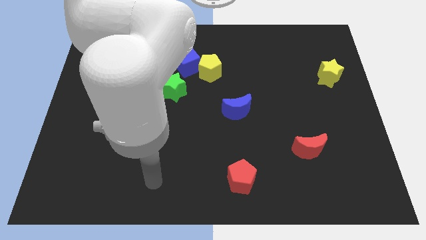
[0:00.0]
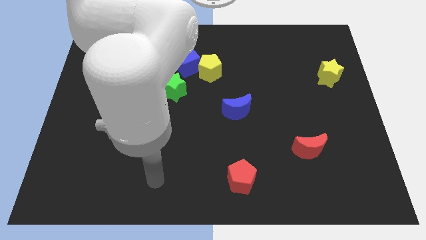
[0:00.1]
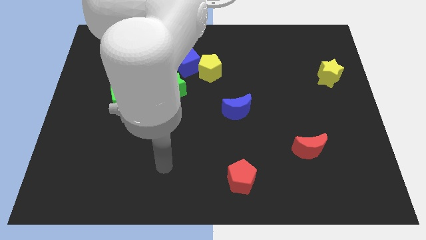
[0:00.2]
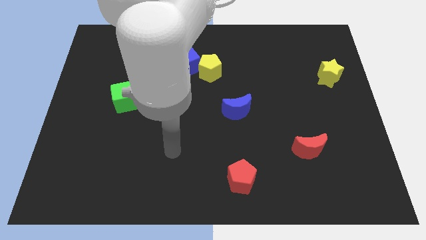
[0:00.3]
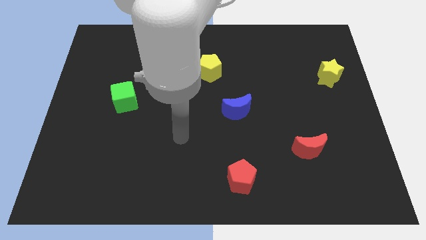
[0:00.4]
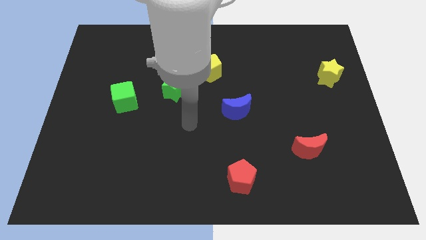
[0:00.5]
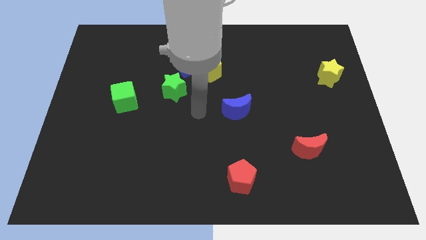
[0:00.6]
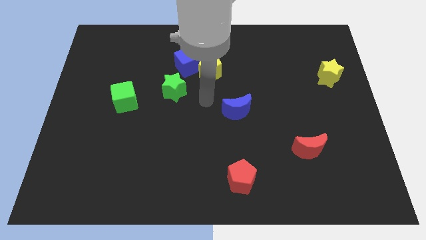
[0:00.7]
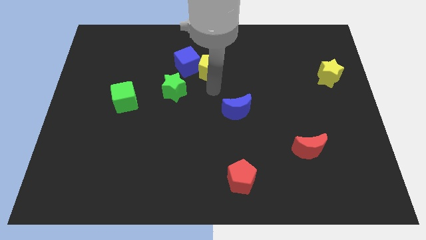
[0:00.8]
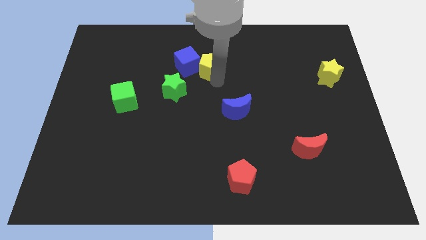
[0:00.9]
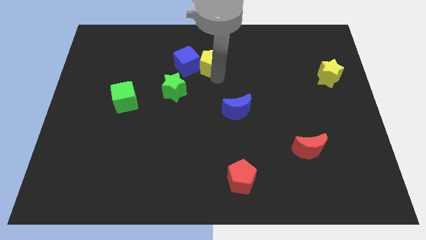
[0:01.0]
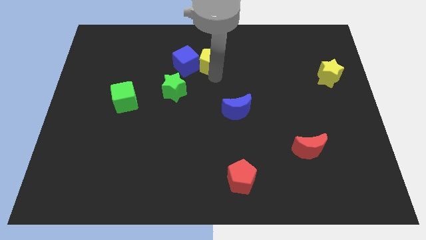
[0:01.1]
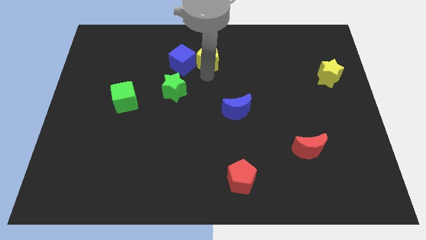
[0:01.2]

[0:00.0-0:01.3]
move the yellow pentagon to the right side of the blue cube

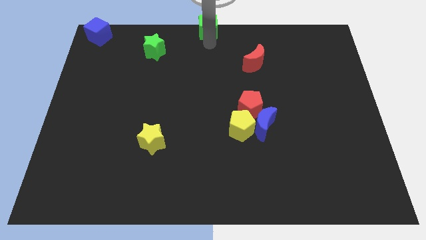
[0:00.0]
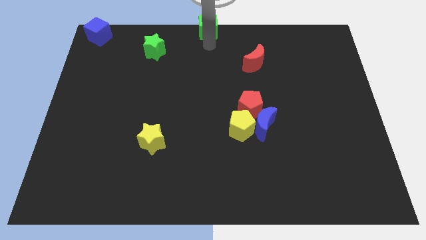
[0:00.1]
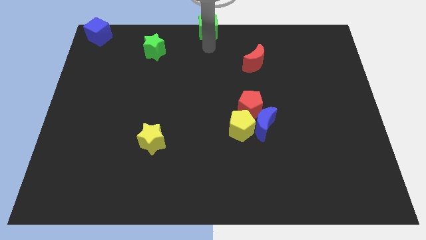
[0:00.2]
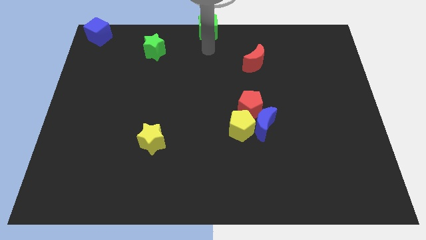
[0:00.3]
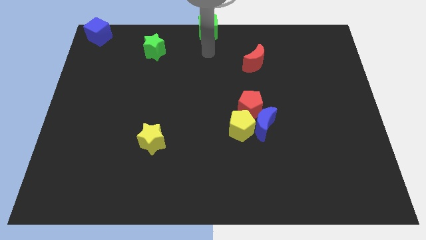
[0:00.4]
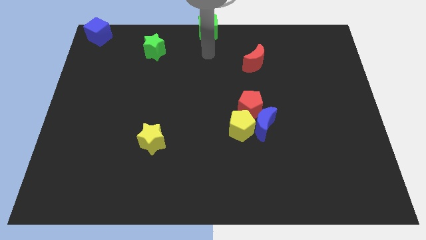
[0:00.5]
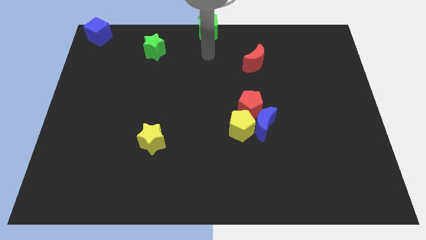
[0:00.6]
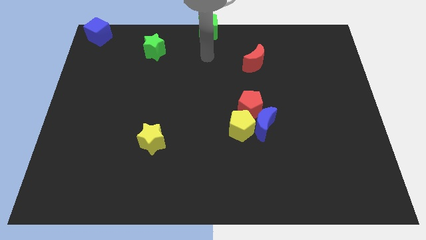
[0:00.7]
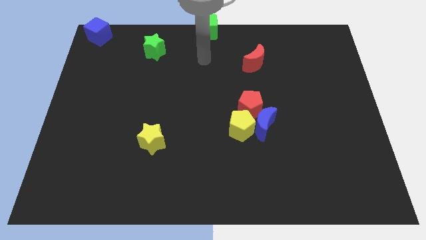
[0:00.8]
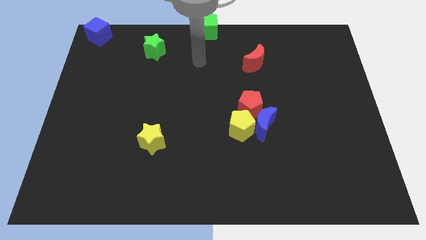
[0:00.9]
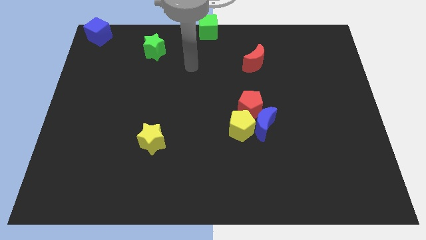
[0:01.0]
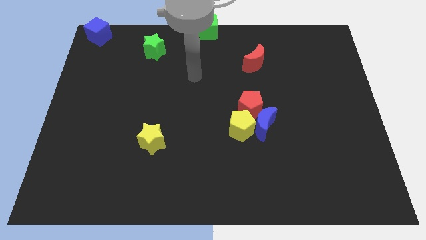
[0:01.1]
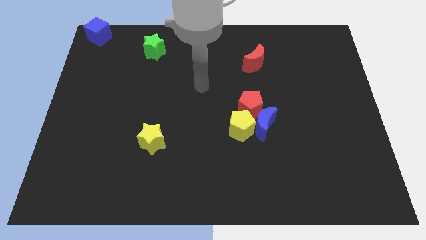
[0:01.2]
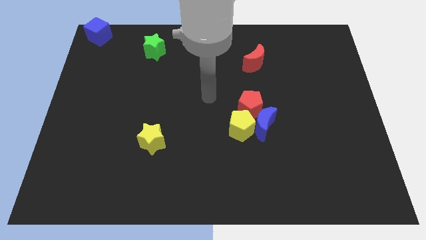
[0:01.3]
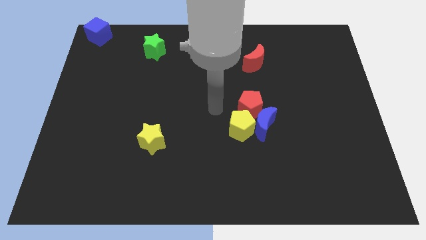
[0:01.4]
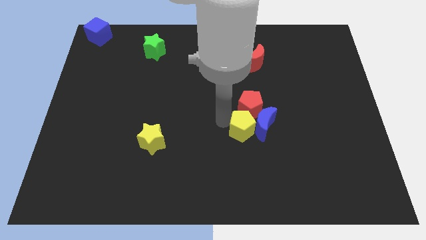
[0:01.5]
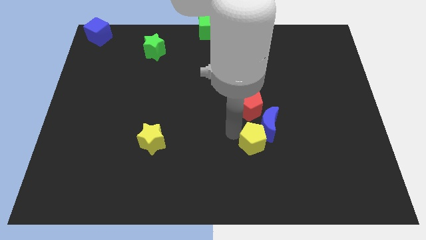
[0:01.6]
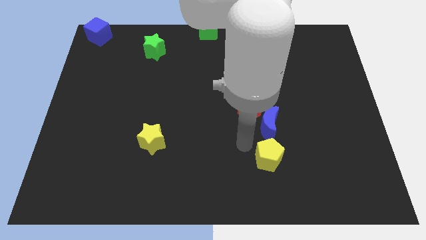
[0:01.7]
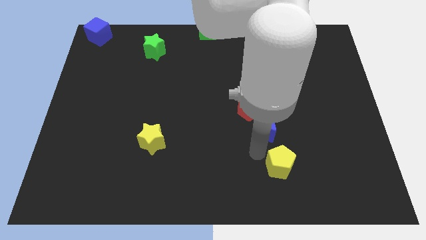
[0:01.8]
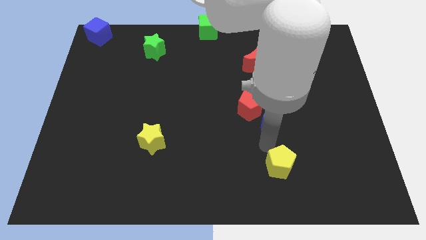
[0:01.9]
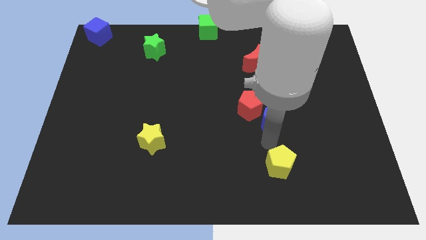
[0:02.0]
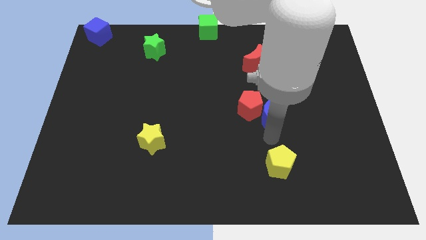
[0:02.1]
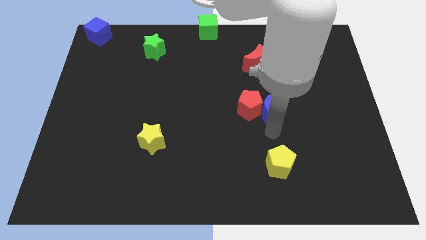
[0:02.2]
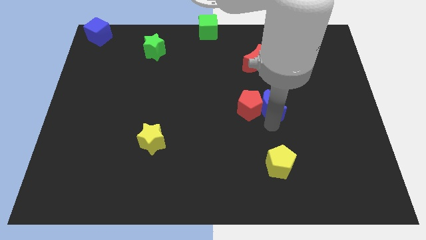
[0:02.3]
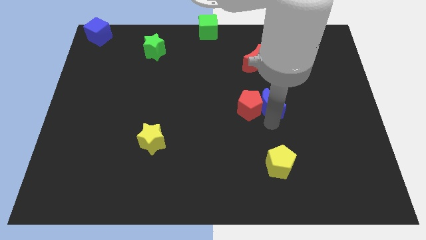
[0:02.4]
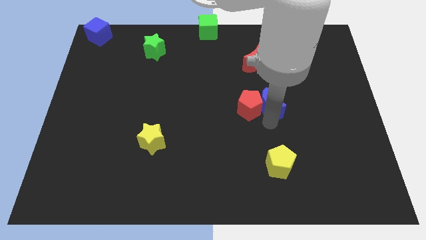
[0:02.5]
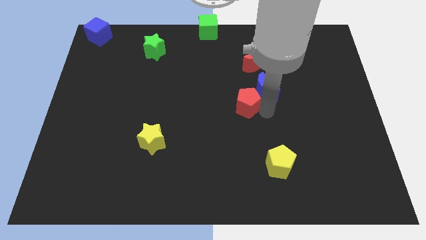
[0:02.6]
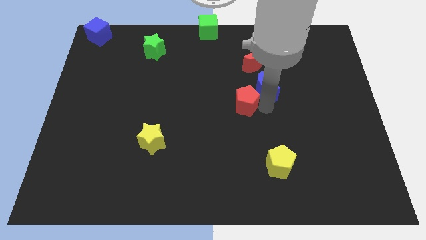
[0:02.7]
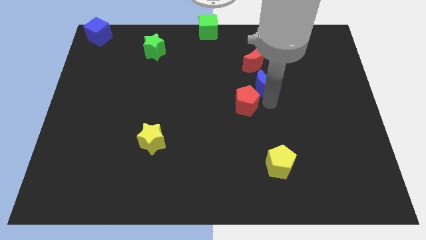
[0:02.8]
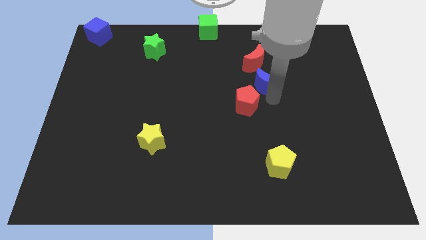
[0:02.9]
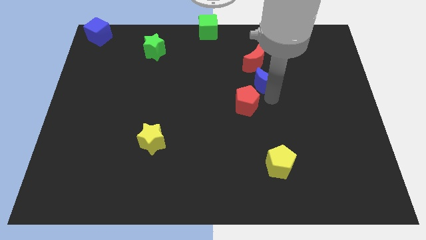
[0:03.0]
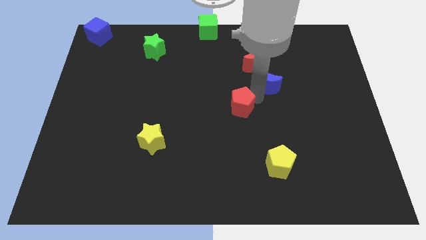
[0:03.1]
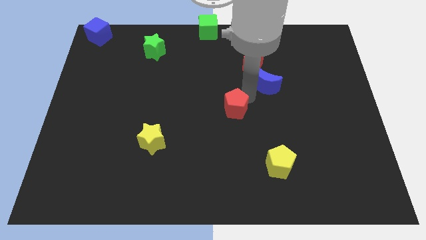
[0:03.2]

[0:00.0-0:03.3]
separate blue moon and red pentagon

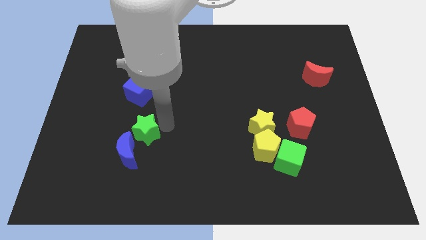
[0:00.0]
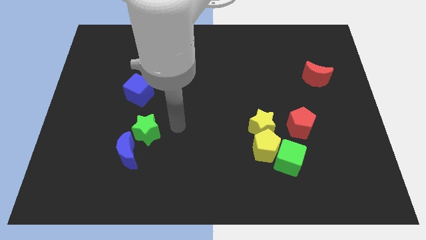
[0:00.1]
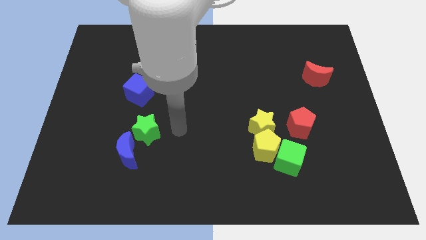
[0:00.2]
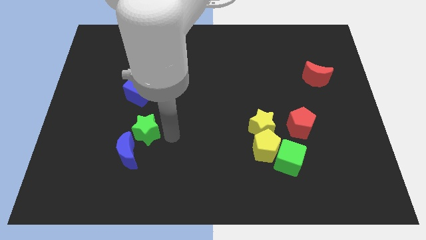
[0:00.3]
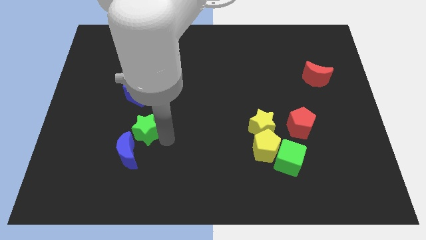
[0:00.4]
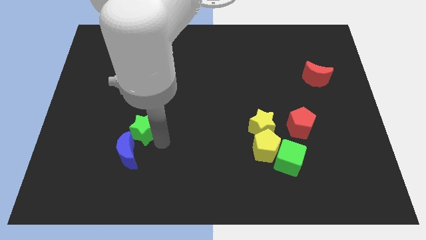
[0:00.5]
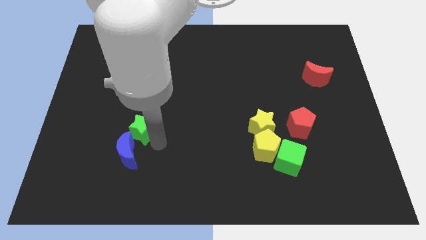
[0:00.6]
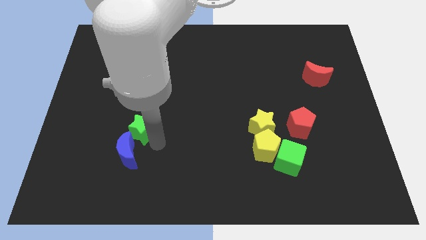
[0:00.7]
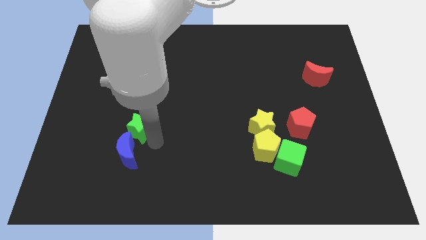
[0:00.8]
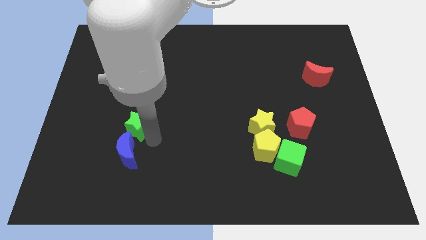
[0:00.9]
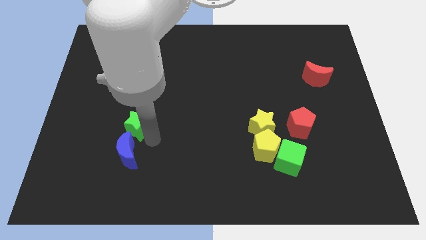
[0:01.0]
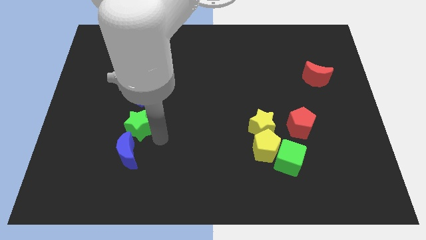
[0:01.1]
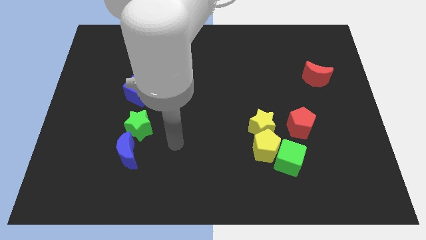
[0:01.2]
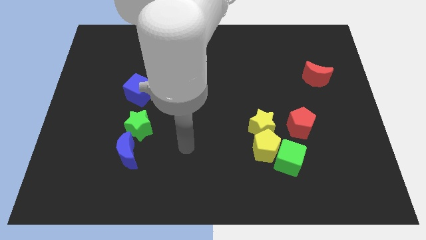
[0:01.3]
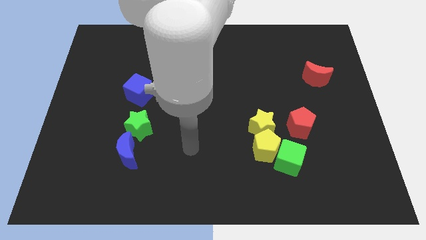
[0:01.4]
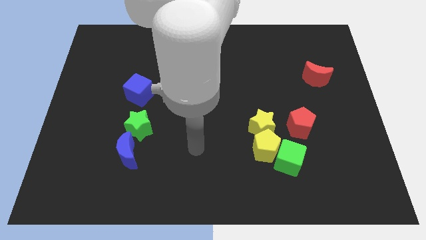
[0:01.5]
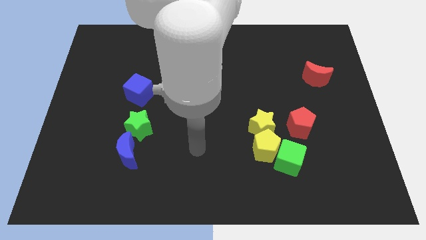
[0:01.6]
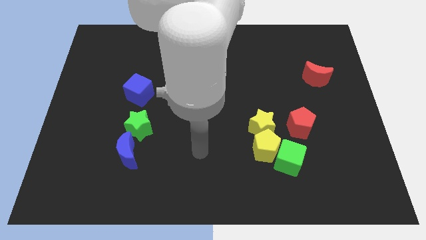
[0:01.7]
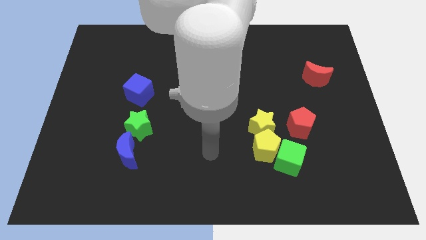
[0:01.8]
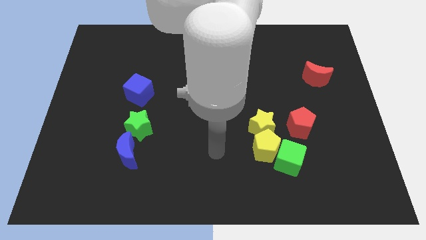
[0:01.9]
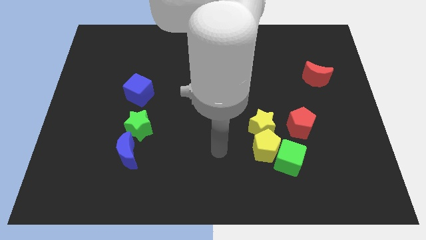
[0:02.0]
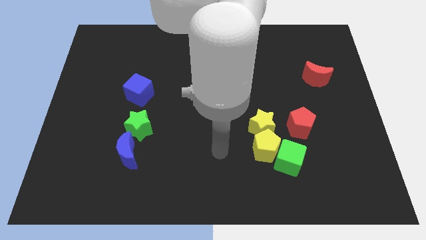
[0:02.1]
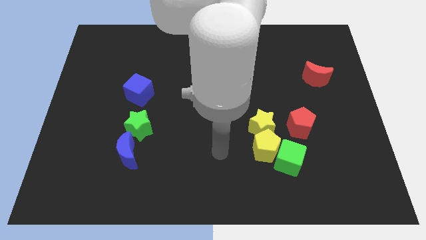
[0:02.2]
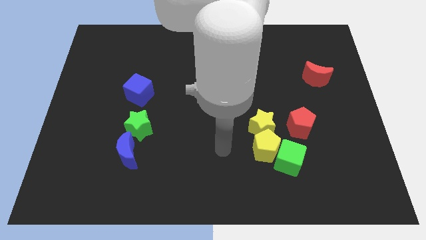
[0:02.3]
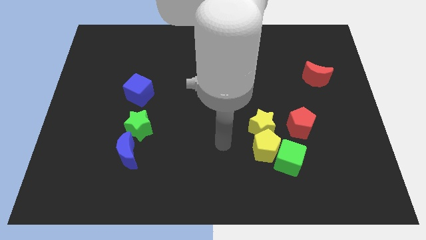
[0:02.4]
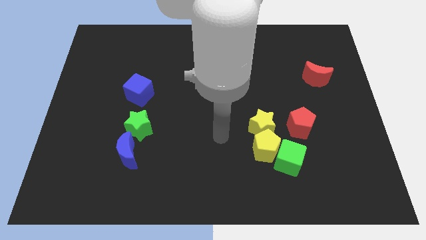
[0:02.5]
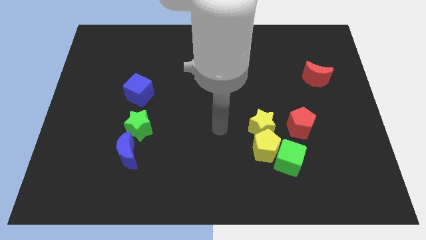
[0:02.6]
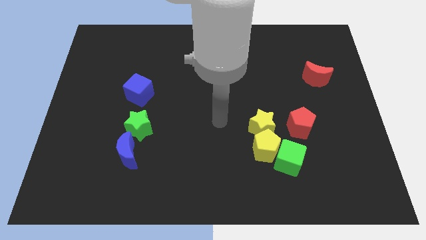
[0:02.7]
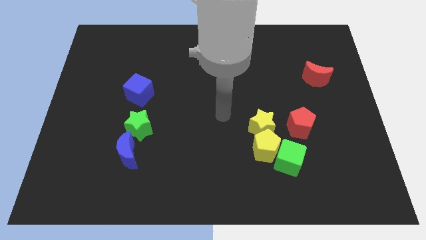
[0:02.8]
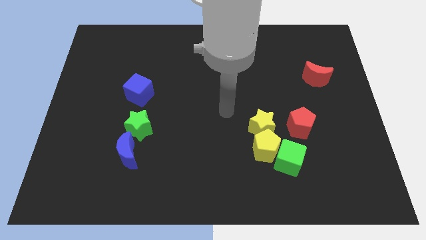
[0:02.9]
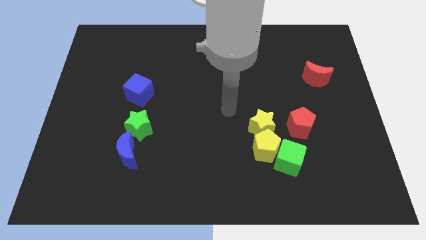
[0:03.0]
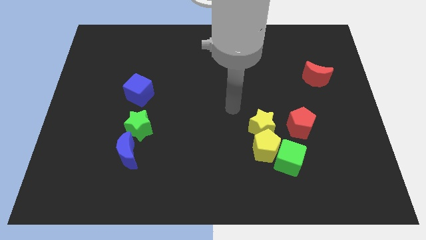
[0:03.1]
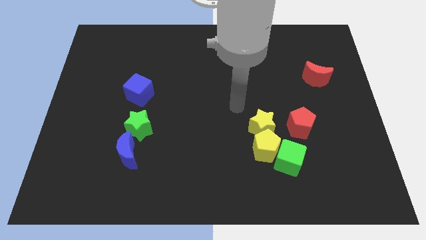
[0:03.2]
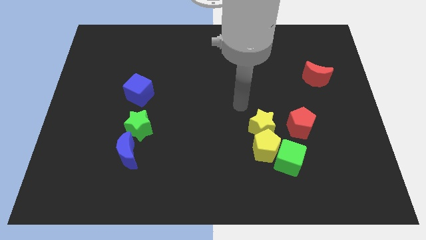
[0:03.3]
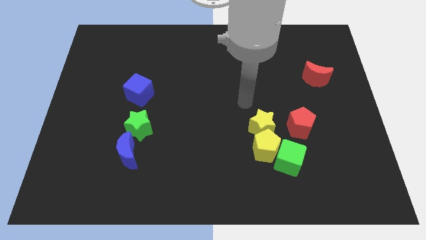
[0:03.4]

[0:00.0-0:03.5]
push the green star to the top of the blue moon

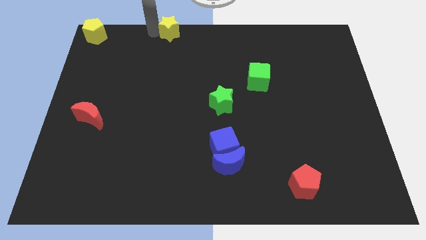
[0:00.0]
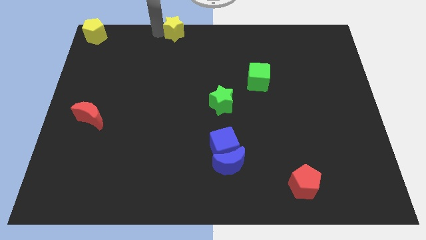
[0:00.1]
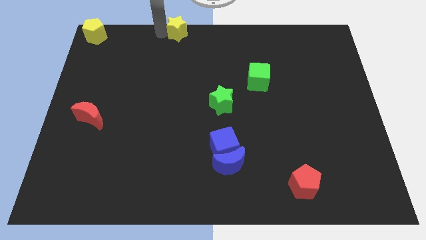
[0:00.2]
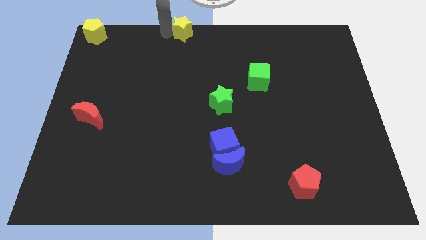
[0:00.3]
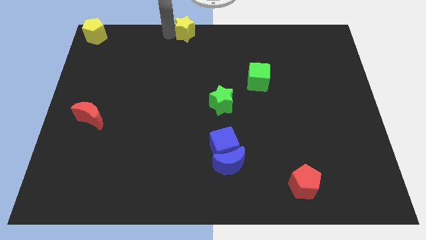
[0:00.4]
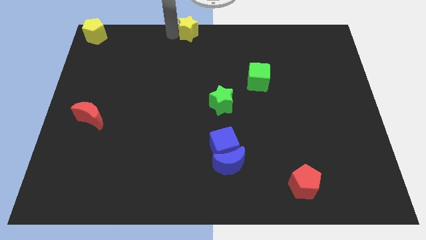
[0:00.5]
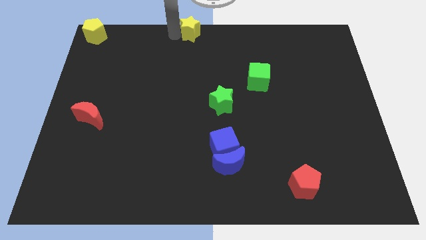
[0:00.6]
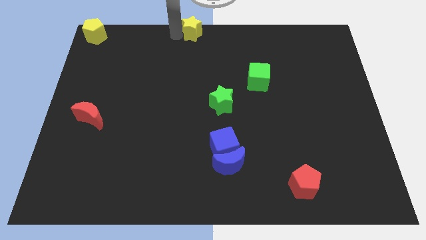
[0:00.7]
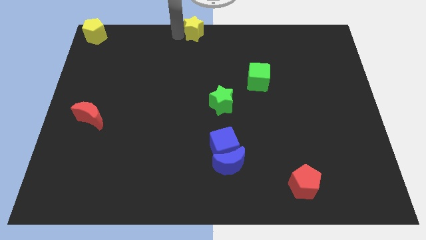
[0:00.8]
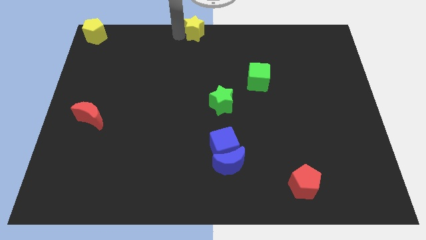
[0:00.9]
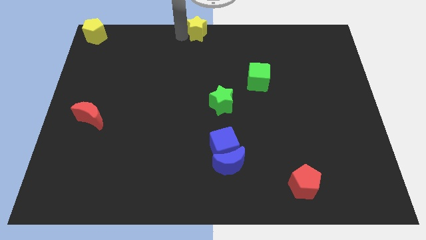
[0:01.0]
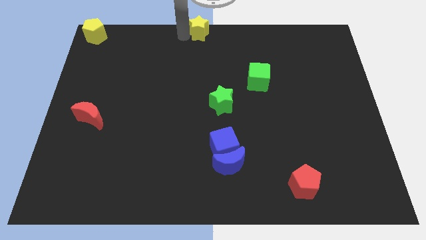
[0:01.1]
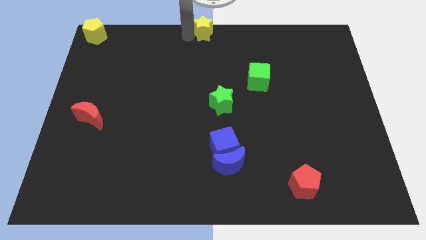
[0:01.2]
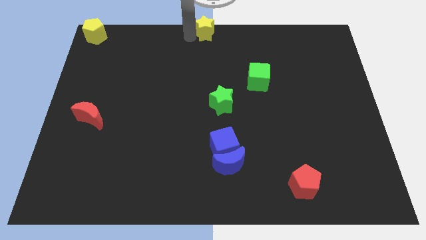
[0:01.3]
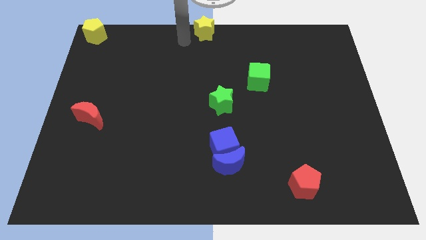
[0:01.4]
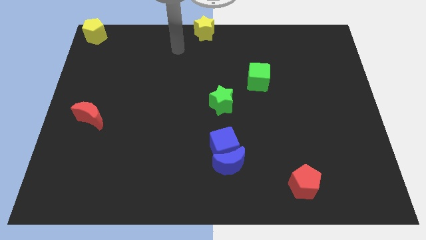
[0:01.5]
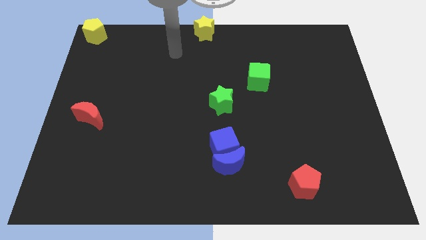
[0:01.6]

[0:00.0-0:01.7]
push the yellow star to the top center of the board
